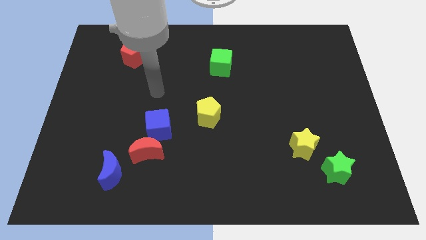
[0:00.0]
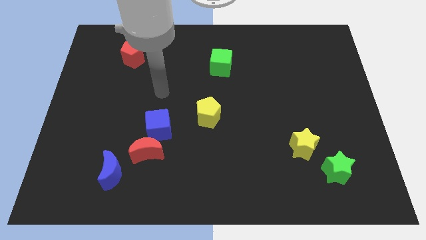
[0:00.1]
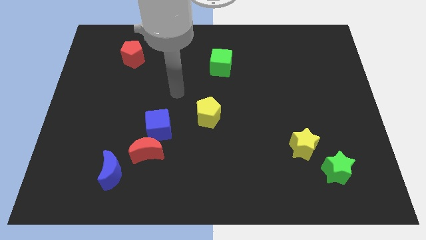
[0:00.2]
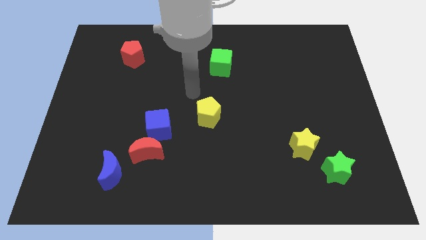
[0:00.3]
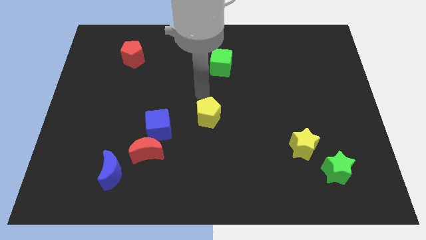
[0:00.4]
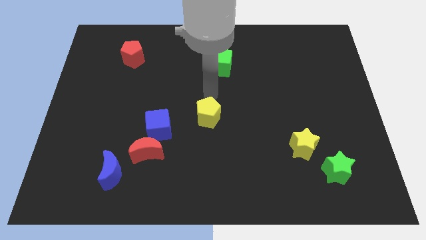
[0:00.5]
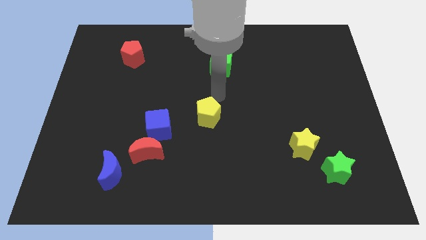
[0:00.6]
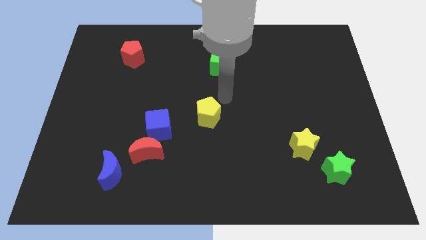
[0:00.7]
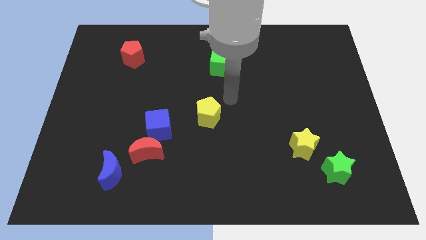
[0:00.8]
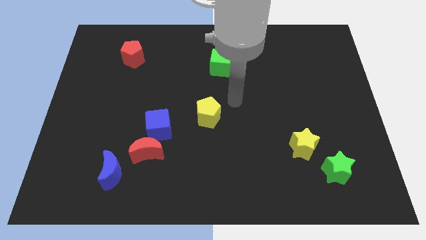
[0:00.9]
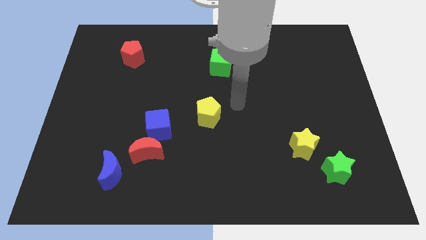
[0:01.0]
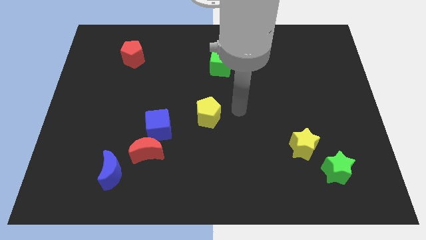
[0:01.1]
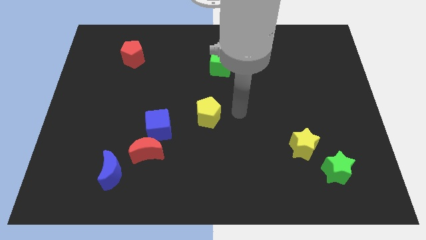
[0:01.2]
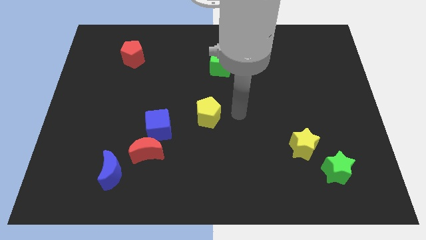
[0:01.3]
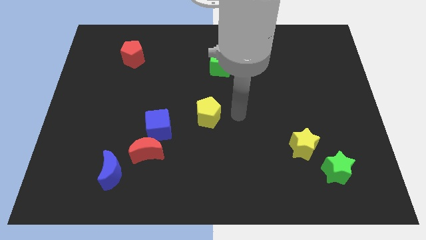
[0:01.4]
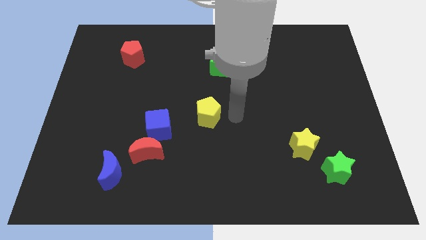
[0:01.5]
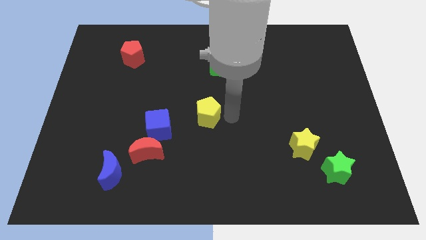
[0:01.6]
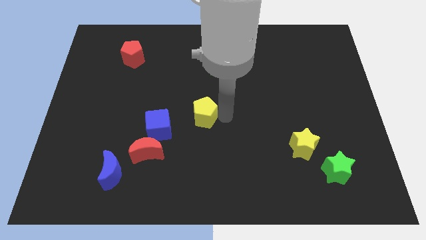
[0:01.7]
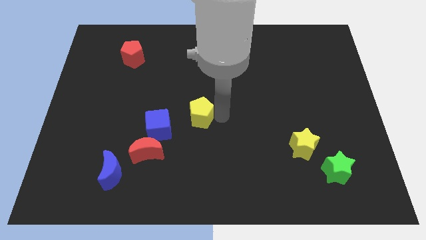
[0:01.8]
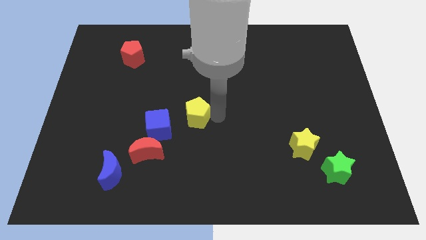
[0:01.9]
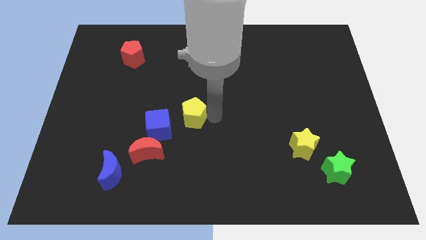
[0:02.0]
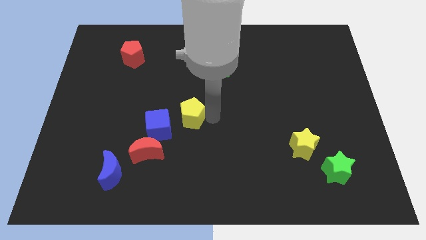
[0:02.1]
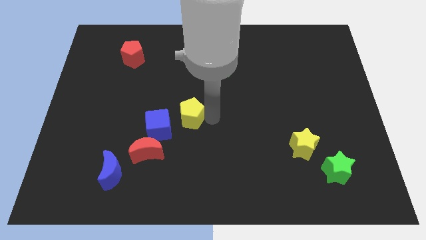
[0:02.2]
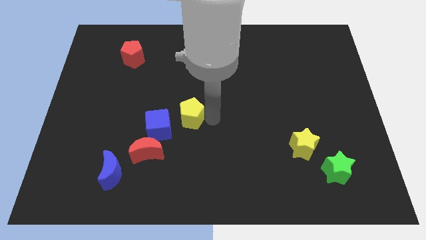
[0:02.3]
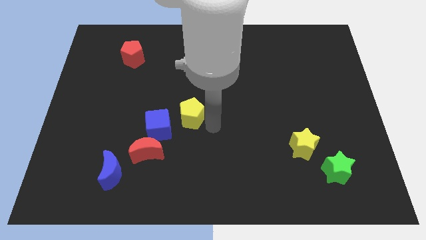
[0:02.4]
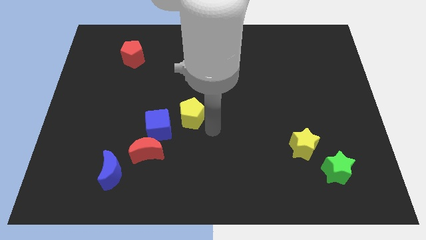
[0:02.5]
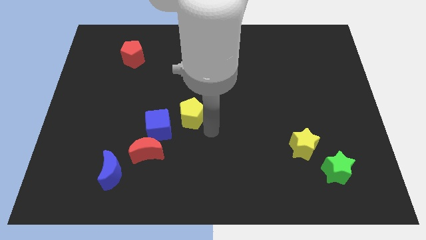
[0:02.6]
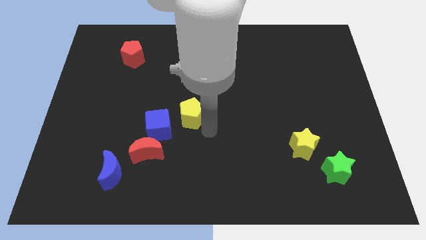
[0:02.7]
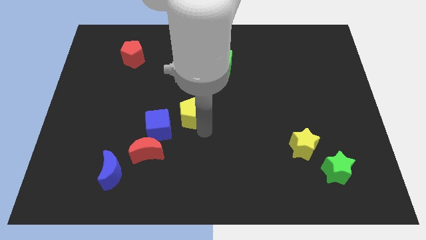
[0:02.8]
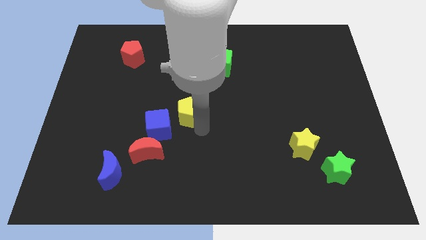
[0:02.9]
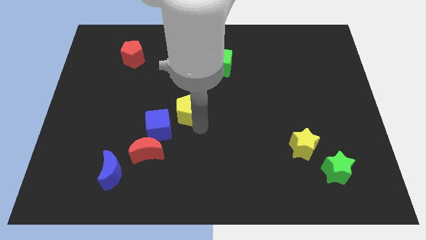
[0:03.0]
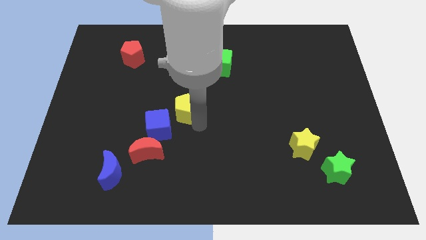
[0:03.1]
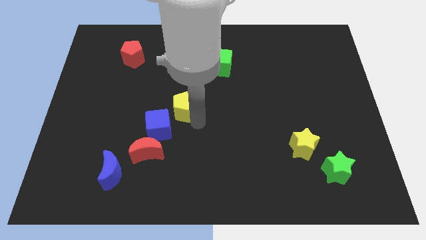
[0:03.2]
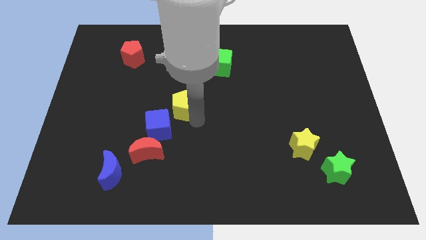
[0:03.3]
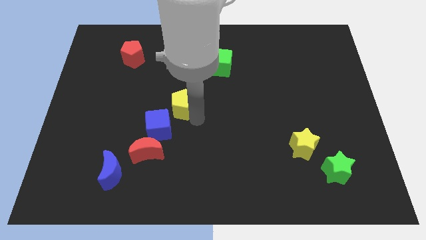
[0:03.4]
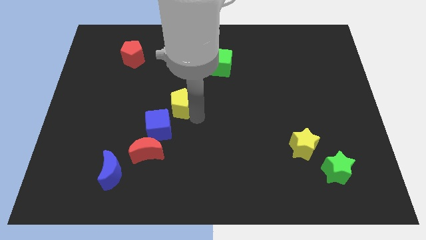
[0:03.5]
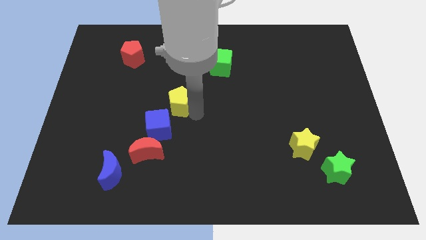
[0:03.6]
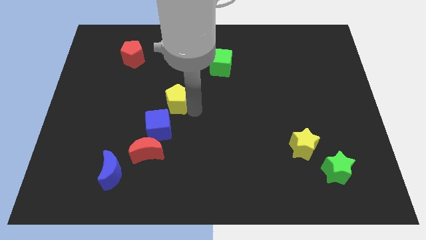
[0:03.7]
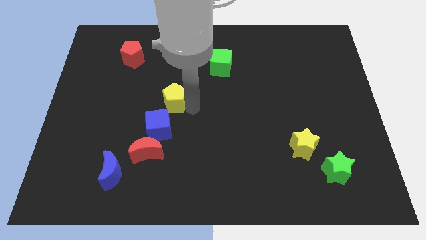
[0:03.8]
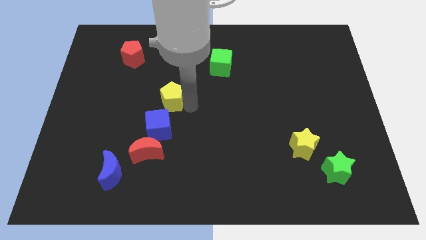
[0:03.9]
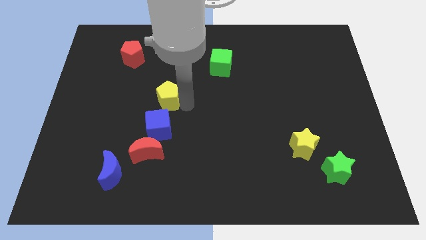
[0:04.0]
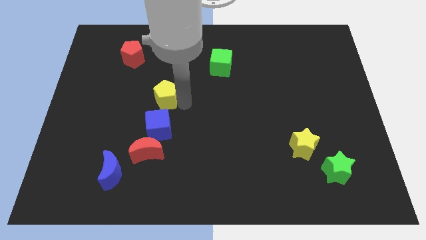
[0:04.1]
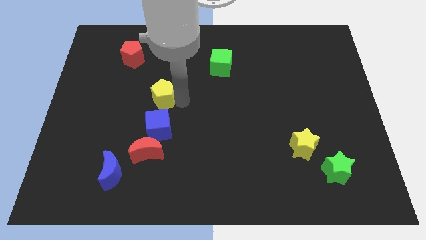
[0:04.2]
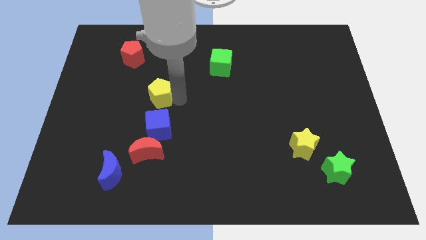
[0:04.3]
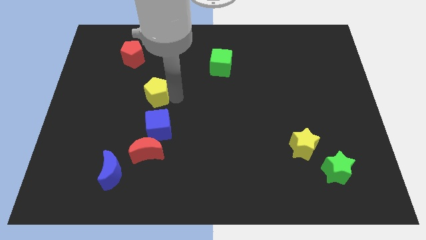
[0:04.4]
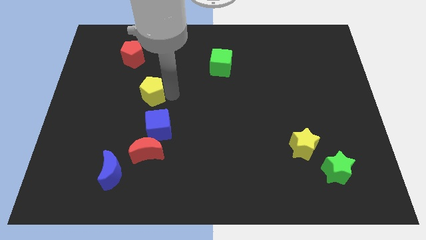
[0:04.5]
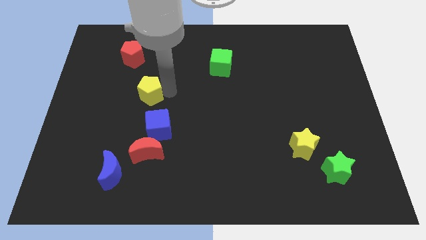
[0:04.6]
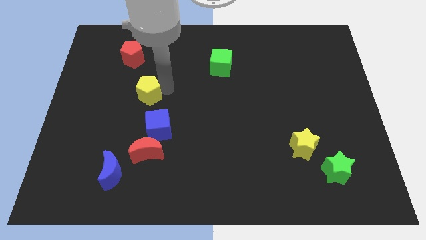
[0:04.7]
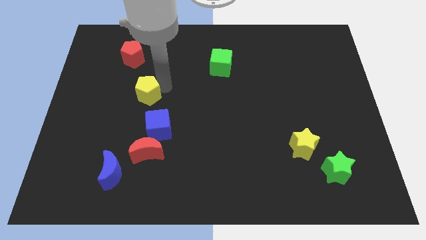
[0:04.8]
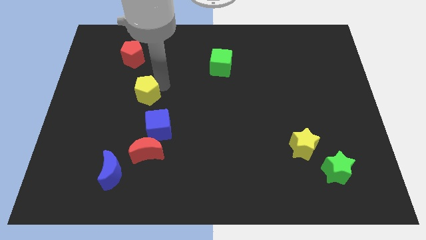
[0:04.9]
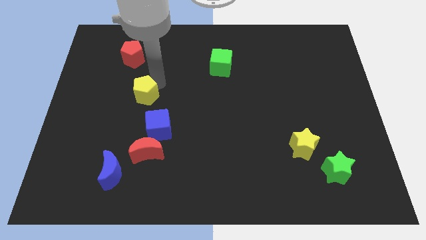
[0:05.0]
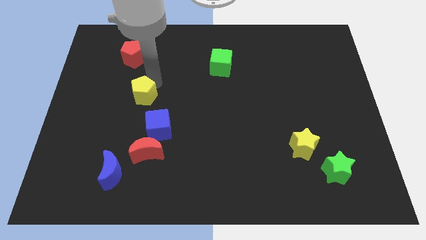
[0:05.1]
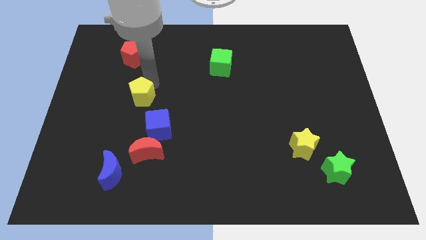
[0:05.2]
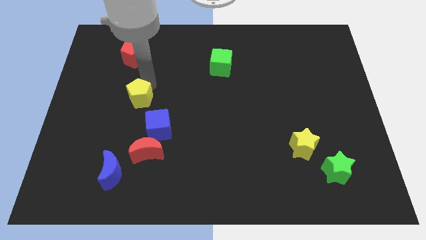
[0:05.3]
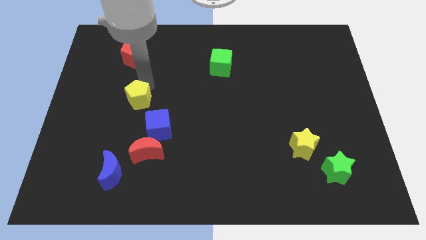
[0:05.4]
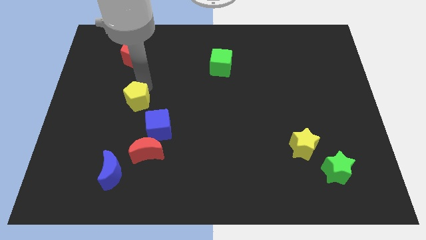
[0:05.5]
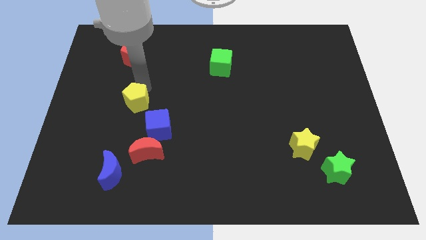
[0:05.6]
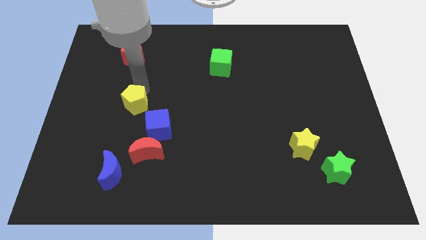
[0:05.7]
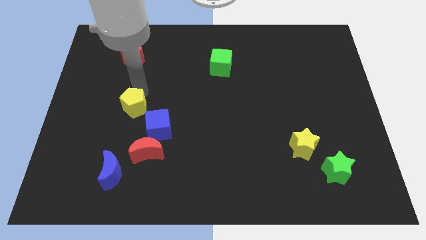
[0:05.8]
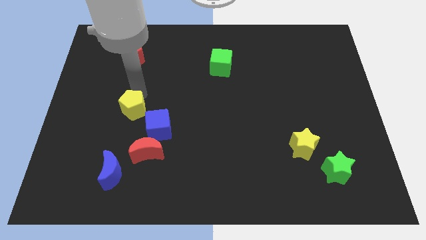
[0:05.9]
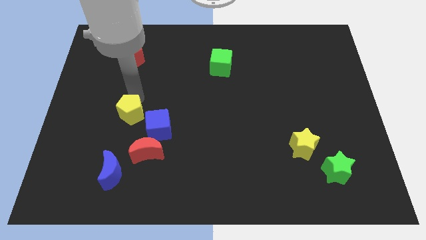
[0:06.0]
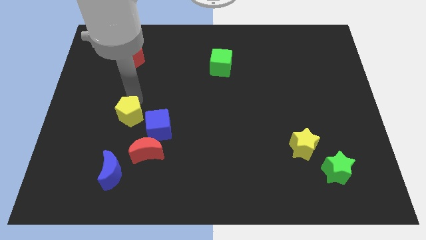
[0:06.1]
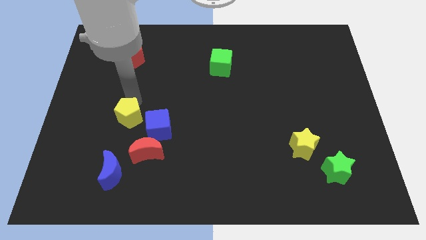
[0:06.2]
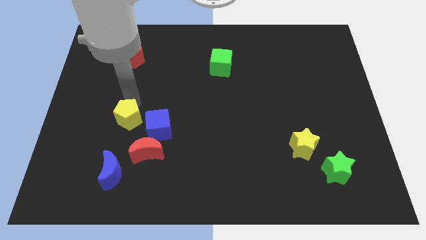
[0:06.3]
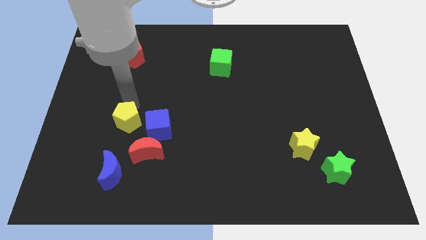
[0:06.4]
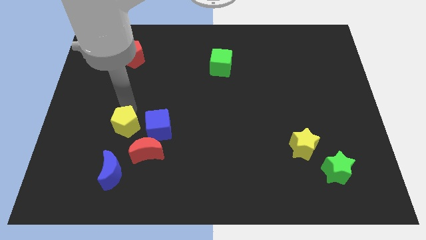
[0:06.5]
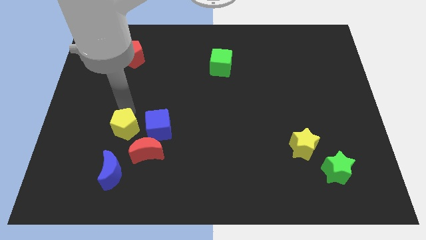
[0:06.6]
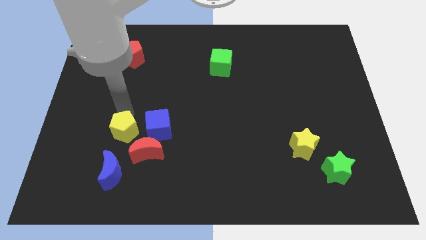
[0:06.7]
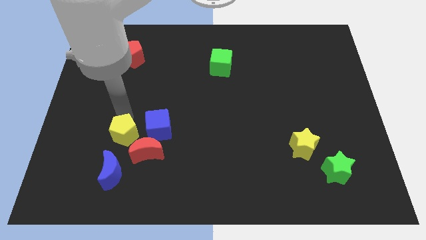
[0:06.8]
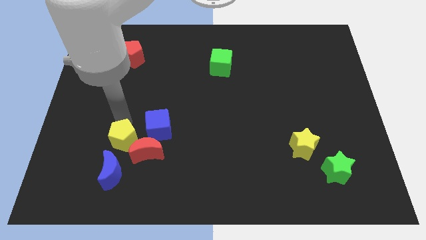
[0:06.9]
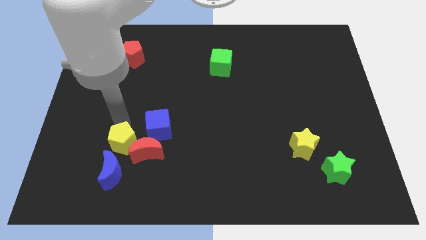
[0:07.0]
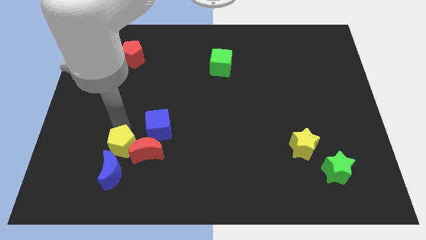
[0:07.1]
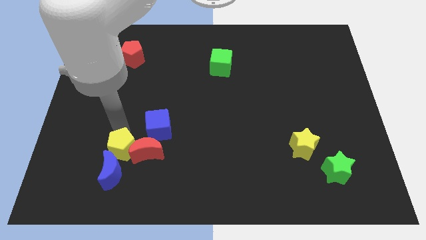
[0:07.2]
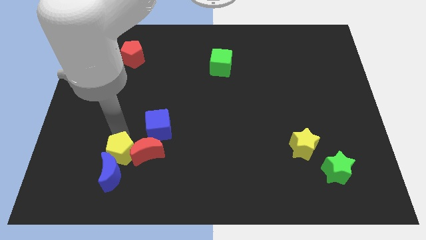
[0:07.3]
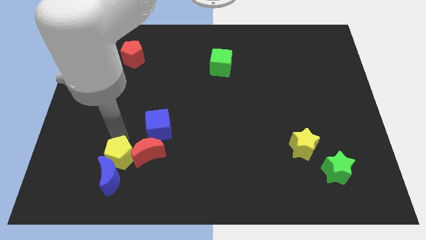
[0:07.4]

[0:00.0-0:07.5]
slide the yellow pentagon towards the blue moon

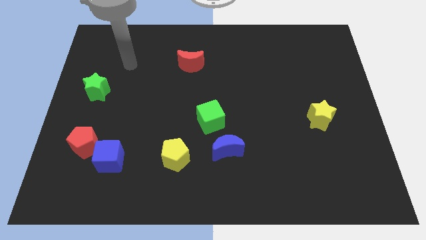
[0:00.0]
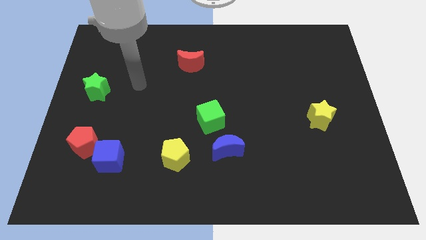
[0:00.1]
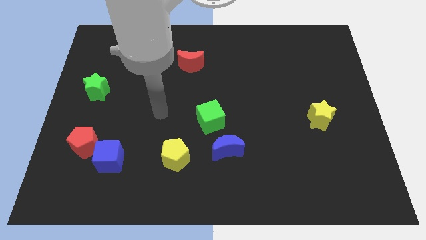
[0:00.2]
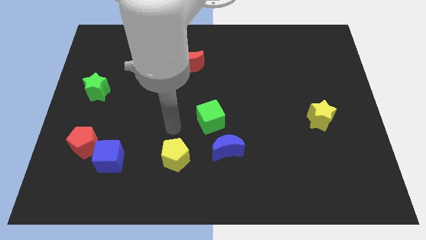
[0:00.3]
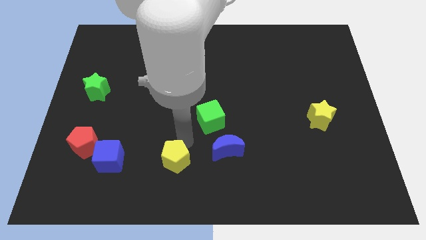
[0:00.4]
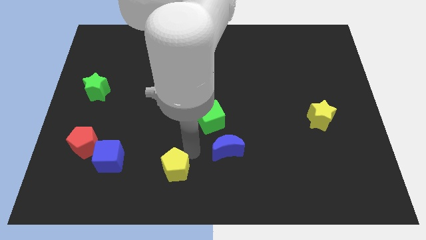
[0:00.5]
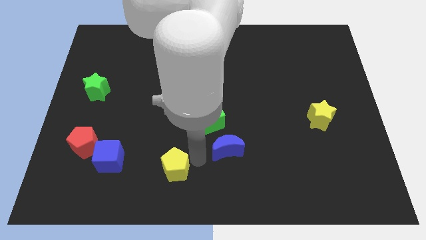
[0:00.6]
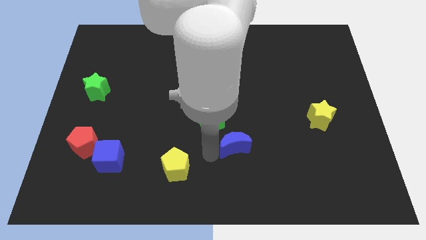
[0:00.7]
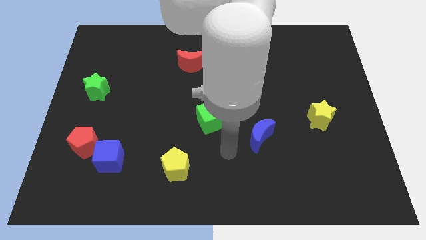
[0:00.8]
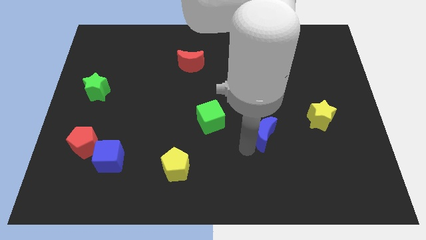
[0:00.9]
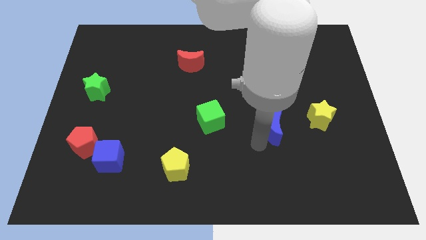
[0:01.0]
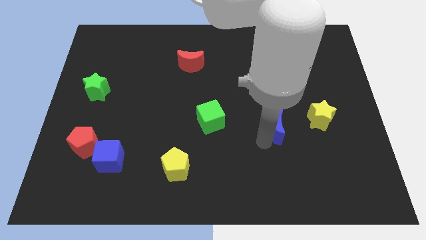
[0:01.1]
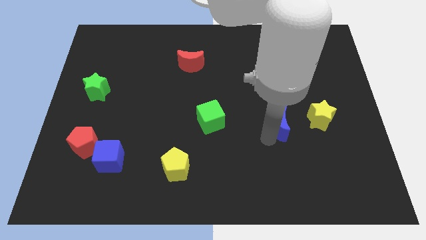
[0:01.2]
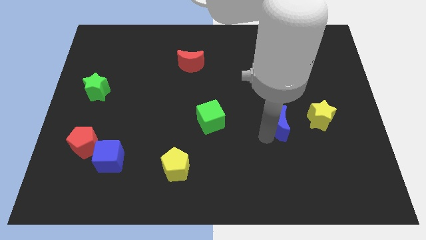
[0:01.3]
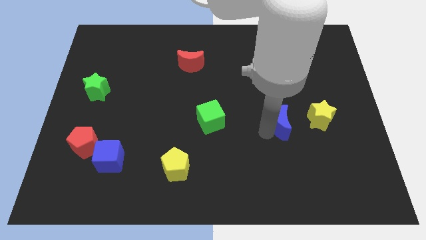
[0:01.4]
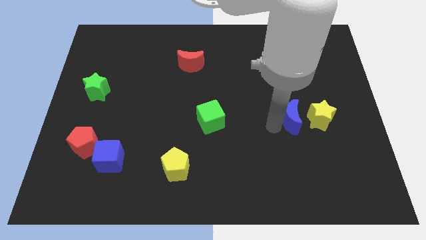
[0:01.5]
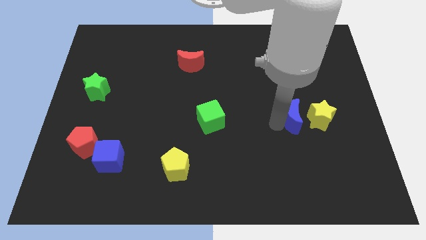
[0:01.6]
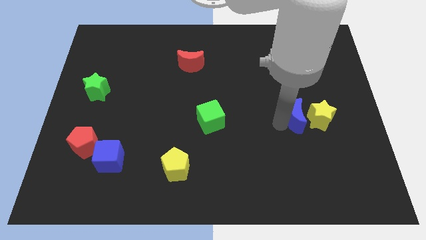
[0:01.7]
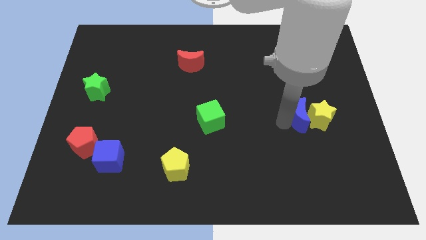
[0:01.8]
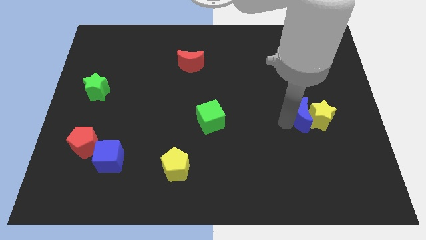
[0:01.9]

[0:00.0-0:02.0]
put the blue moon towards the yellow star
